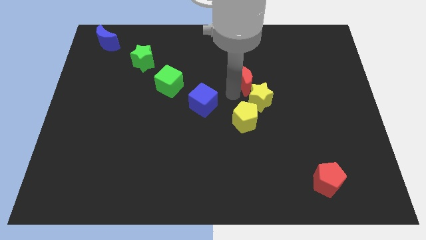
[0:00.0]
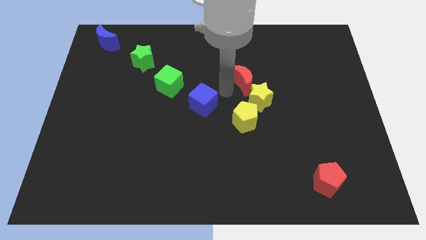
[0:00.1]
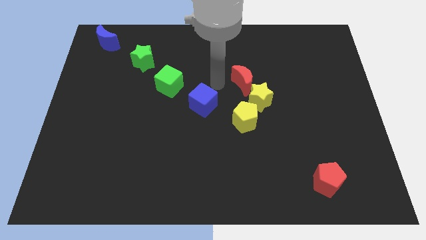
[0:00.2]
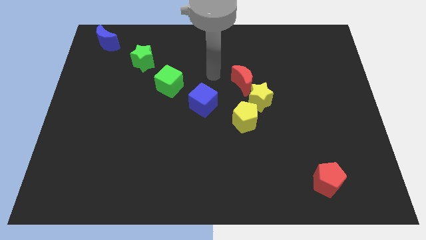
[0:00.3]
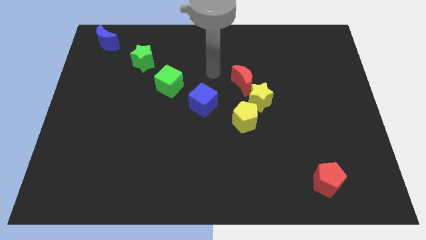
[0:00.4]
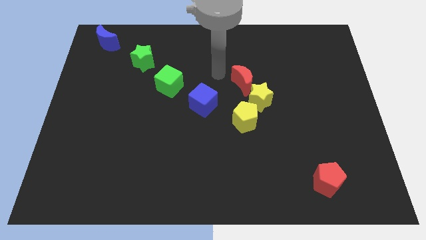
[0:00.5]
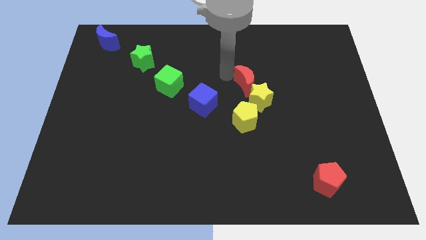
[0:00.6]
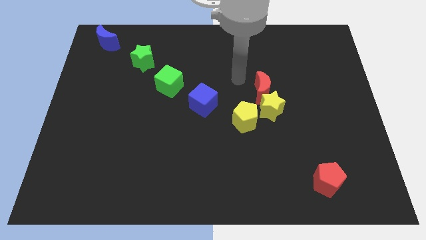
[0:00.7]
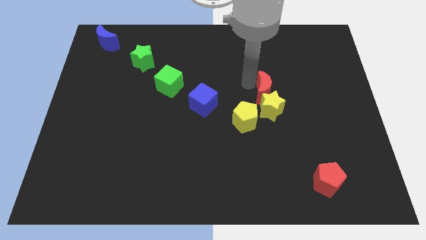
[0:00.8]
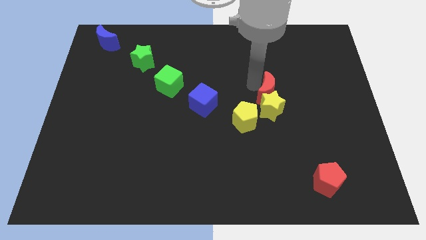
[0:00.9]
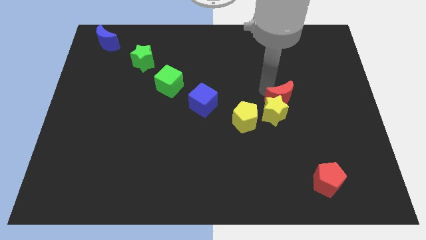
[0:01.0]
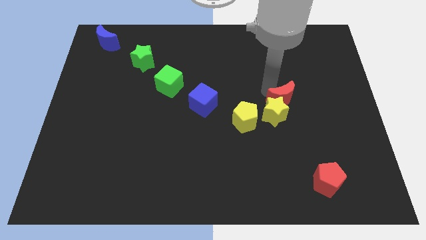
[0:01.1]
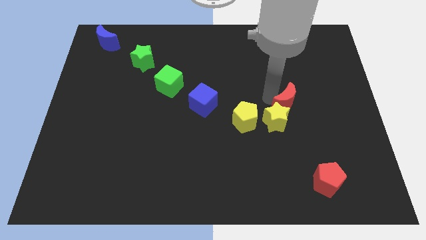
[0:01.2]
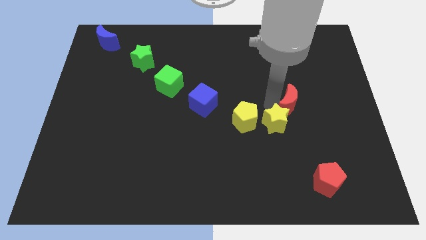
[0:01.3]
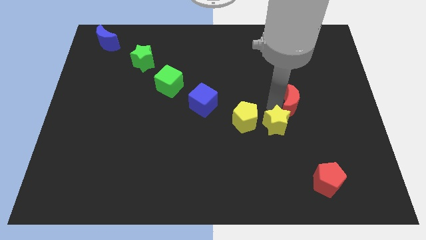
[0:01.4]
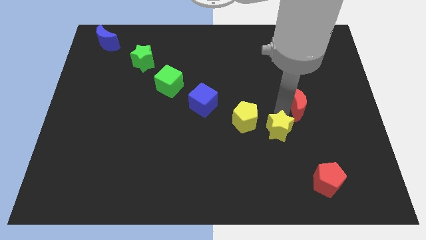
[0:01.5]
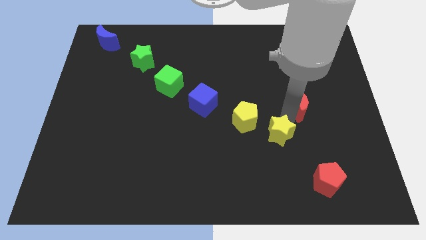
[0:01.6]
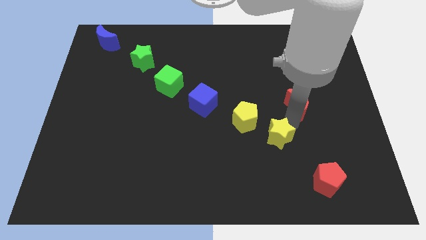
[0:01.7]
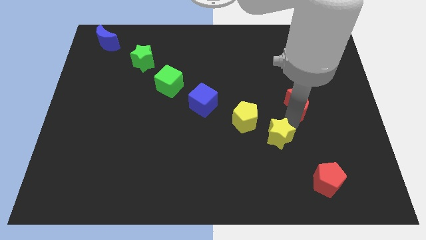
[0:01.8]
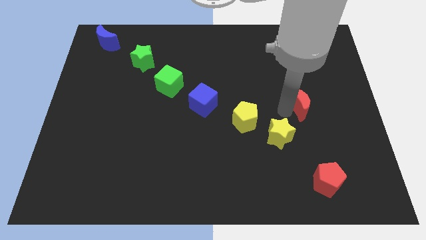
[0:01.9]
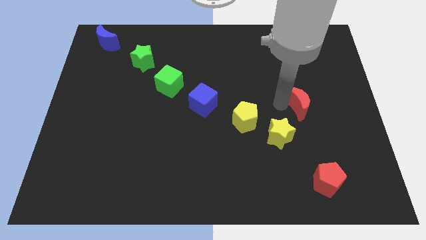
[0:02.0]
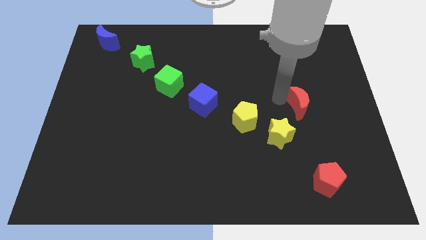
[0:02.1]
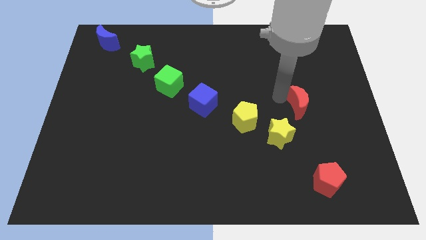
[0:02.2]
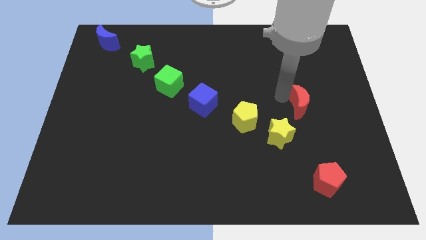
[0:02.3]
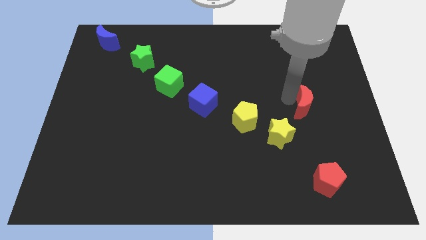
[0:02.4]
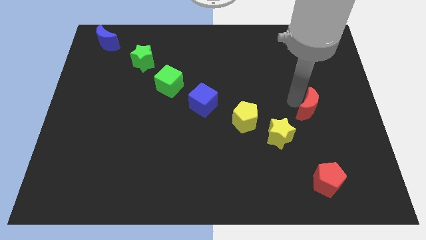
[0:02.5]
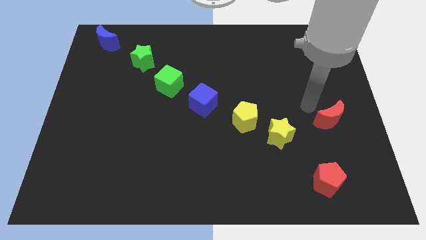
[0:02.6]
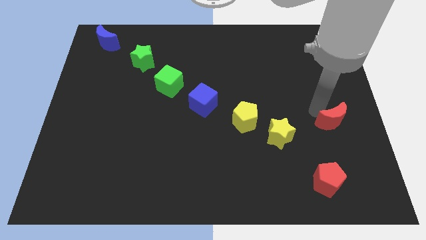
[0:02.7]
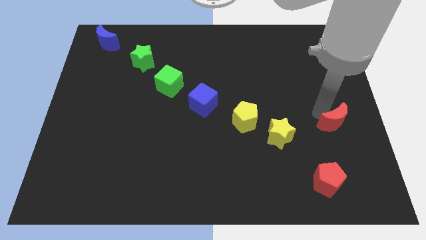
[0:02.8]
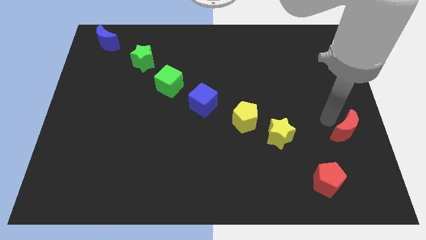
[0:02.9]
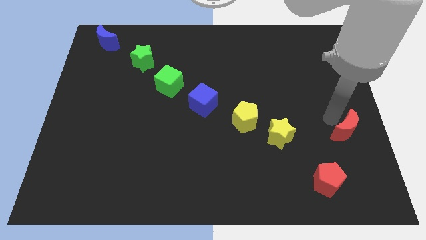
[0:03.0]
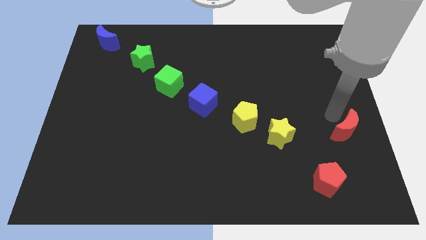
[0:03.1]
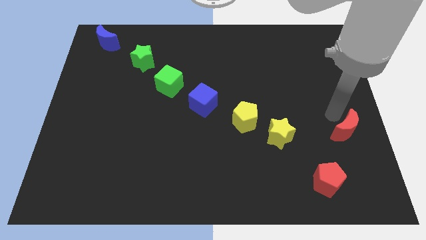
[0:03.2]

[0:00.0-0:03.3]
place red moon vertically above red pentagon

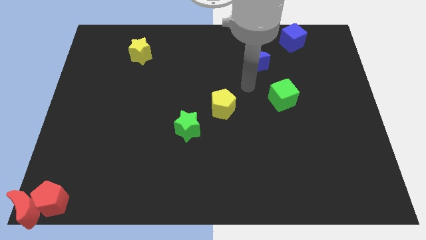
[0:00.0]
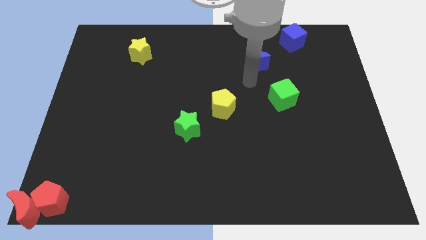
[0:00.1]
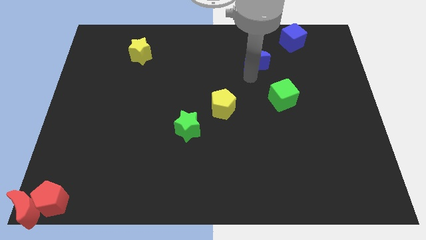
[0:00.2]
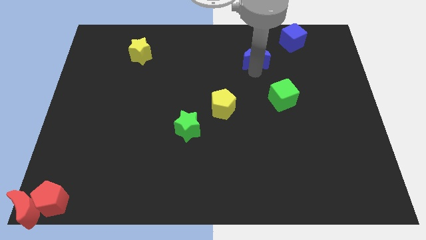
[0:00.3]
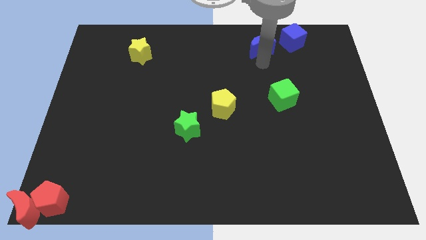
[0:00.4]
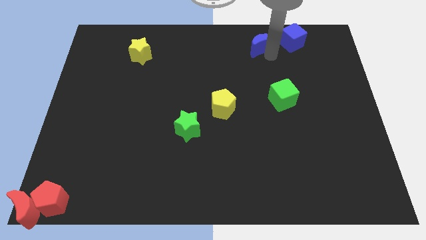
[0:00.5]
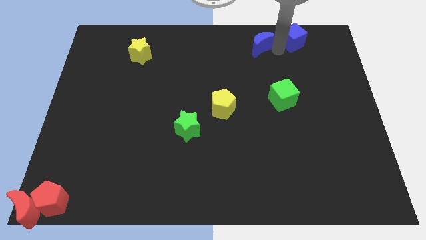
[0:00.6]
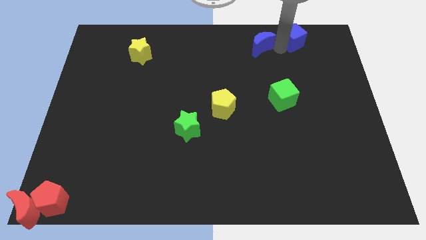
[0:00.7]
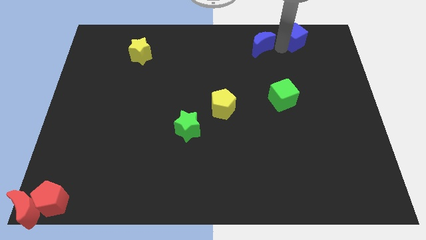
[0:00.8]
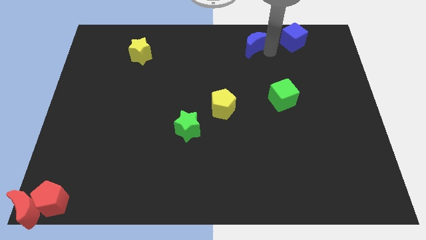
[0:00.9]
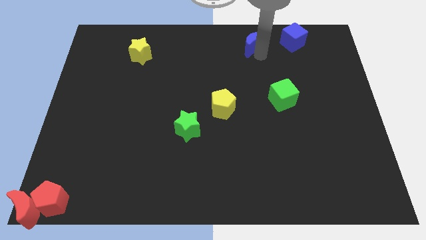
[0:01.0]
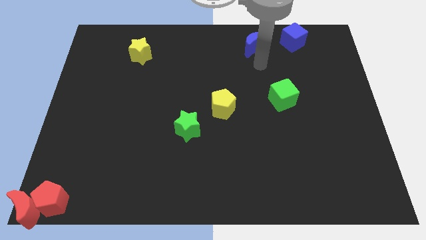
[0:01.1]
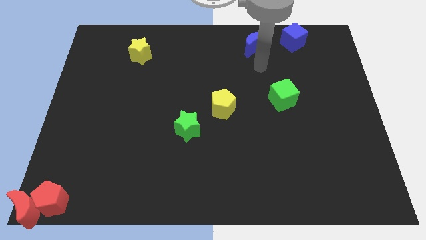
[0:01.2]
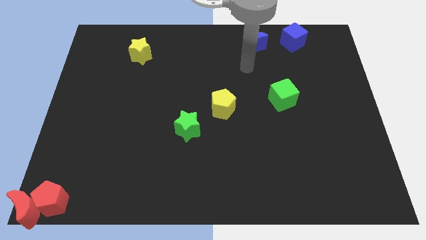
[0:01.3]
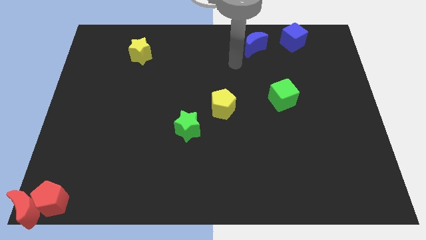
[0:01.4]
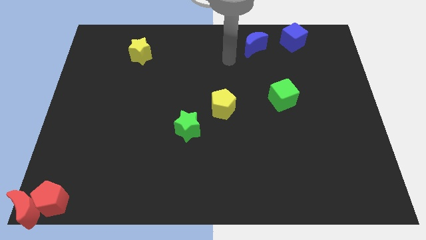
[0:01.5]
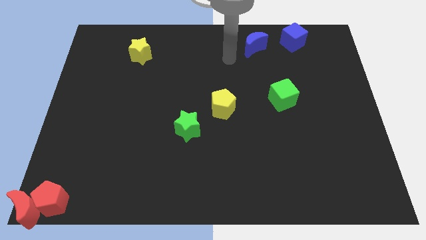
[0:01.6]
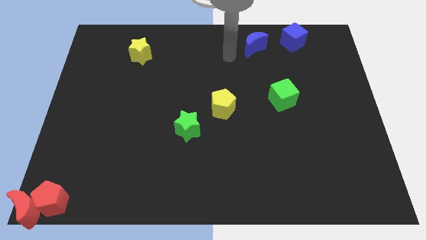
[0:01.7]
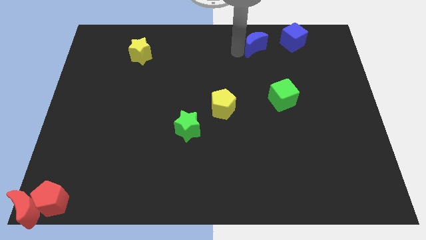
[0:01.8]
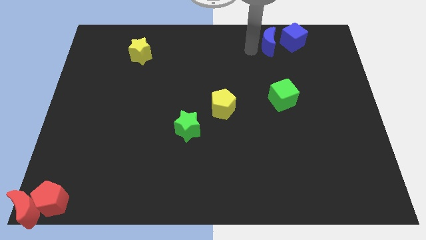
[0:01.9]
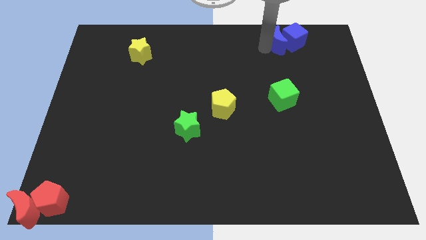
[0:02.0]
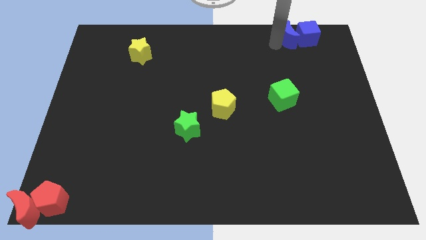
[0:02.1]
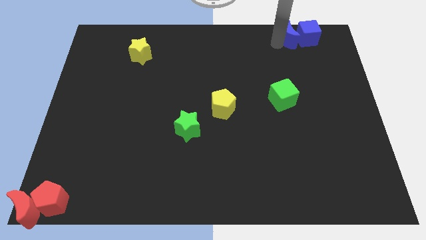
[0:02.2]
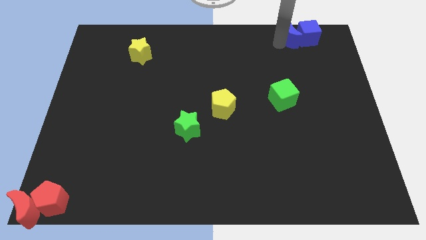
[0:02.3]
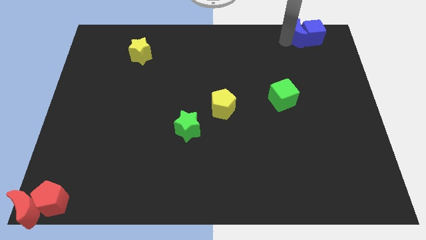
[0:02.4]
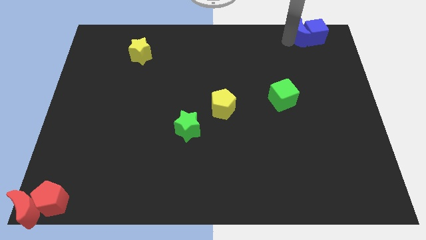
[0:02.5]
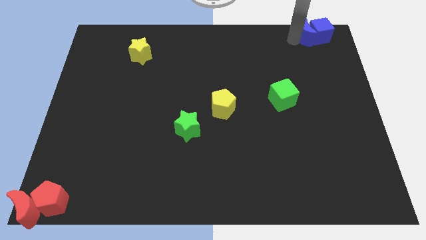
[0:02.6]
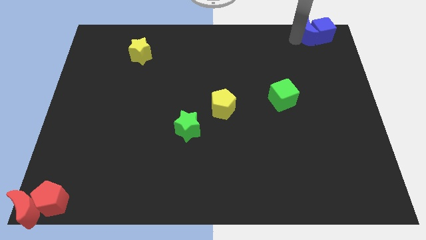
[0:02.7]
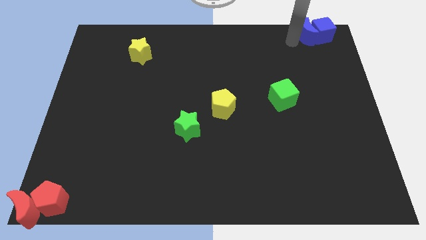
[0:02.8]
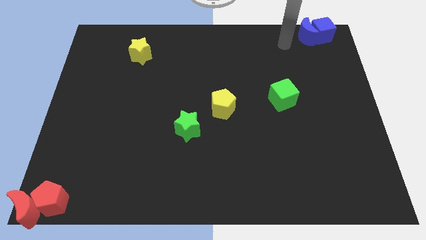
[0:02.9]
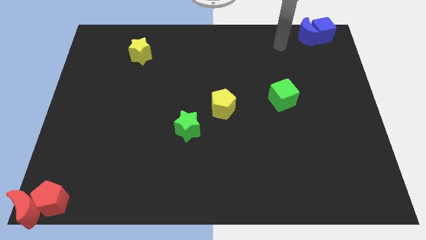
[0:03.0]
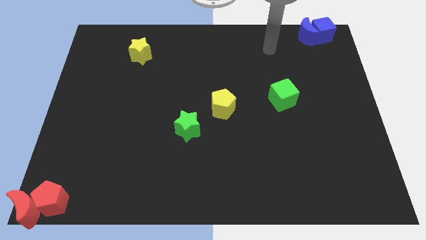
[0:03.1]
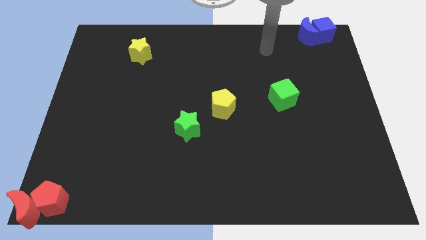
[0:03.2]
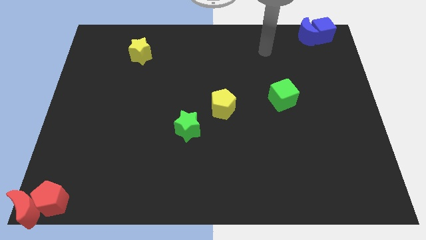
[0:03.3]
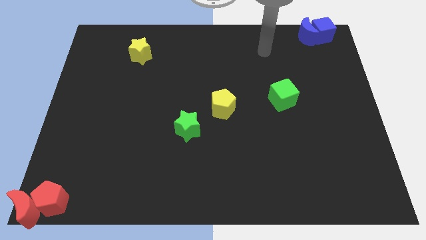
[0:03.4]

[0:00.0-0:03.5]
place the blue blocks at the top right corner of the board

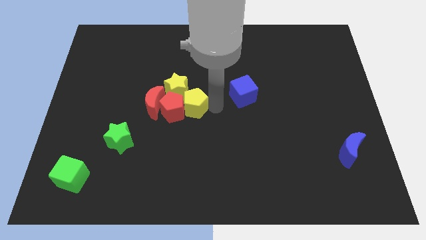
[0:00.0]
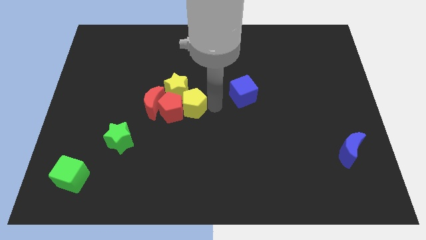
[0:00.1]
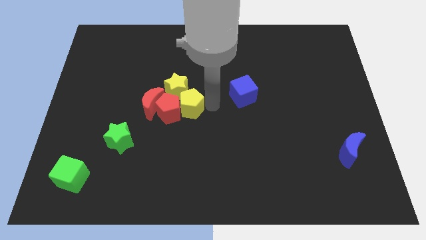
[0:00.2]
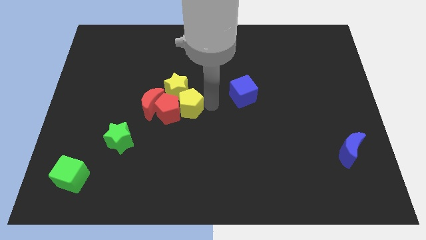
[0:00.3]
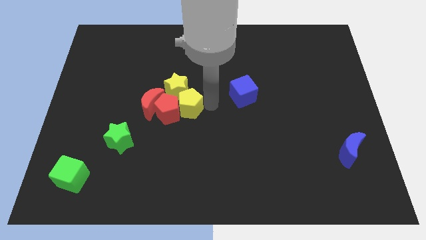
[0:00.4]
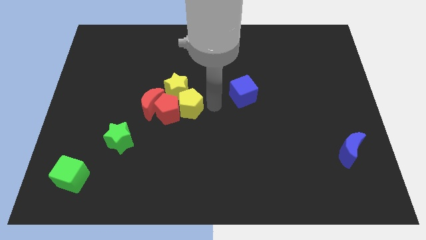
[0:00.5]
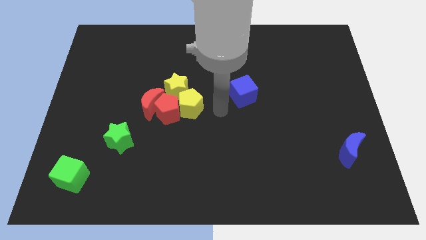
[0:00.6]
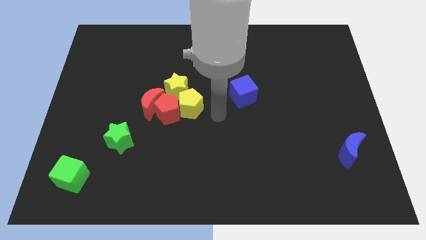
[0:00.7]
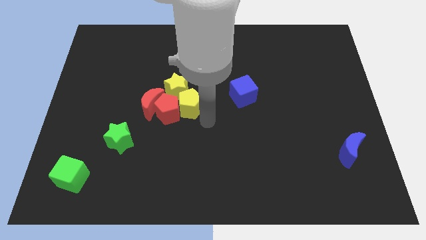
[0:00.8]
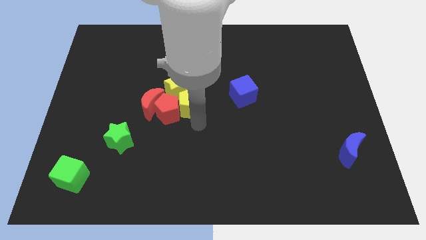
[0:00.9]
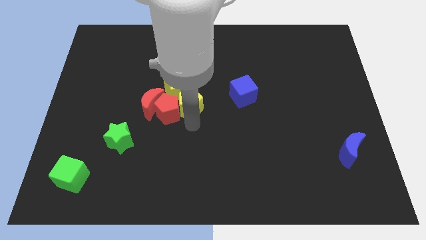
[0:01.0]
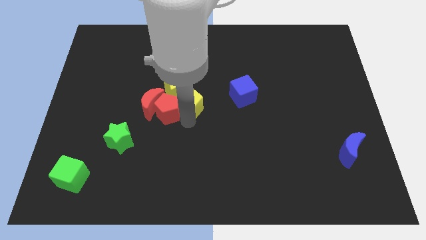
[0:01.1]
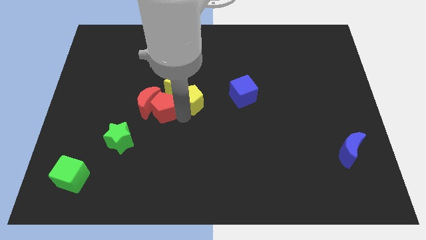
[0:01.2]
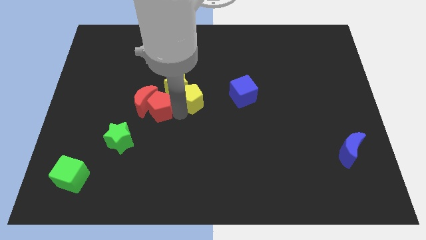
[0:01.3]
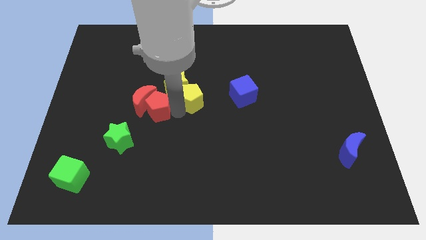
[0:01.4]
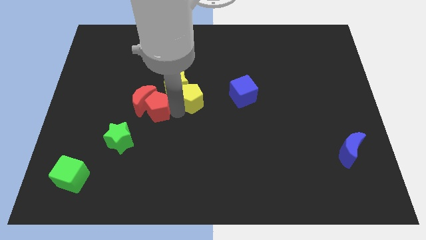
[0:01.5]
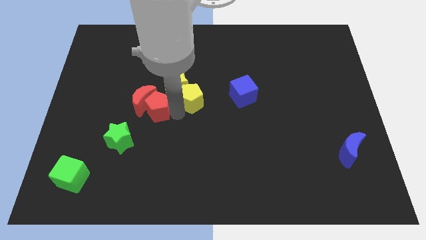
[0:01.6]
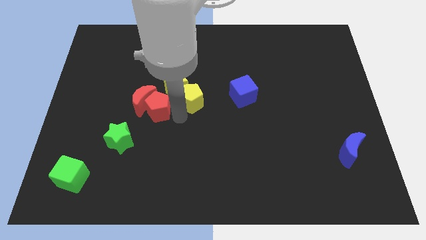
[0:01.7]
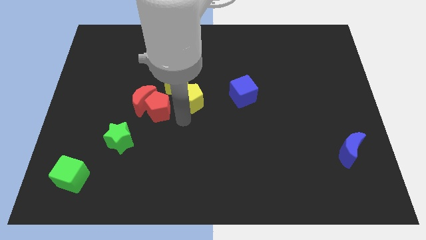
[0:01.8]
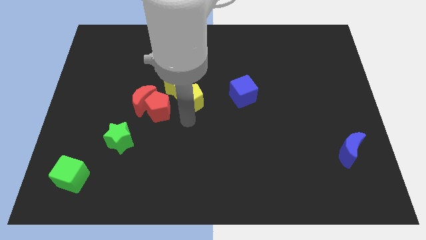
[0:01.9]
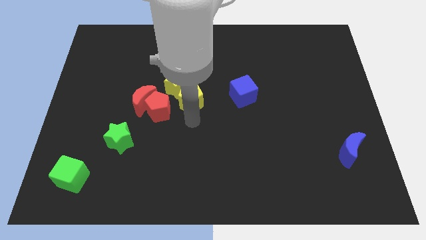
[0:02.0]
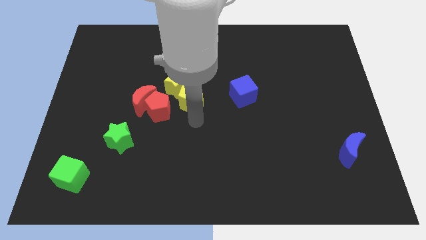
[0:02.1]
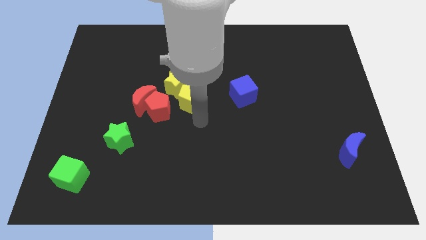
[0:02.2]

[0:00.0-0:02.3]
separate the red pentagon and yellow pentagon
